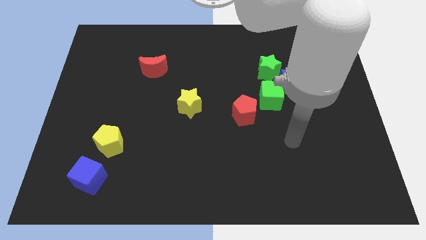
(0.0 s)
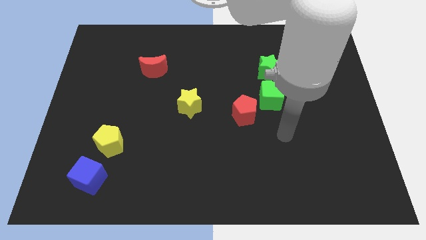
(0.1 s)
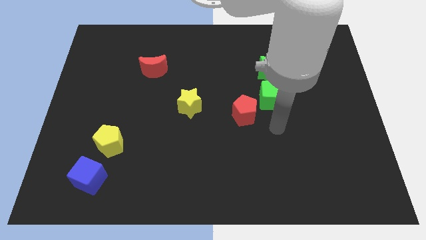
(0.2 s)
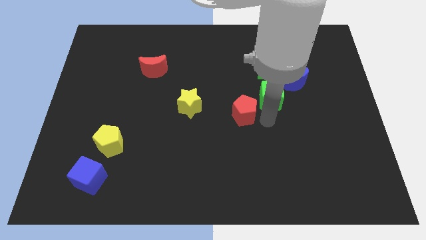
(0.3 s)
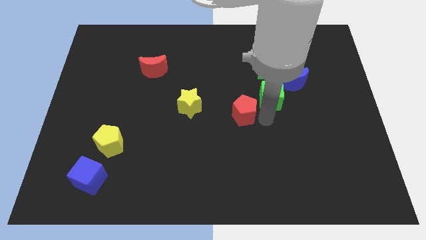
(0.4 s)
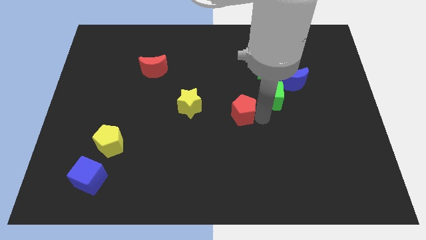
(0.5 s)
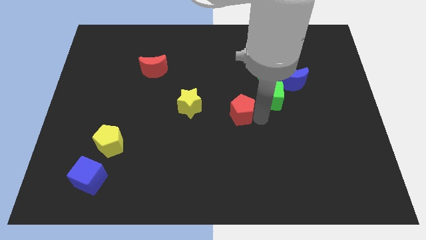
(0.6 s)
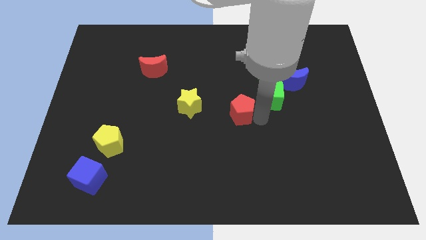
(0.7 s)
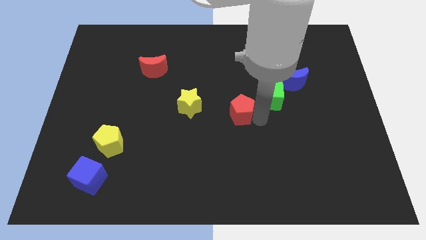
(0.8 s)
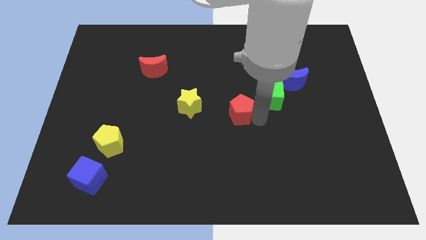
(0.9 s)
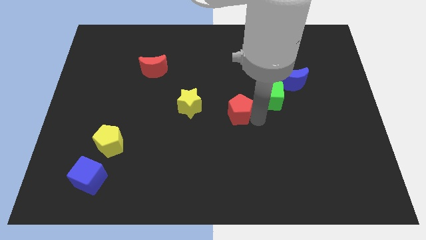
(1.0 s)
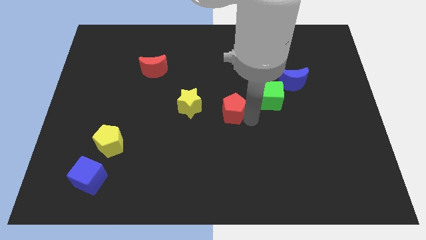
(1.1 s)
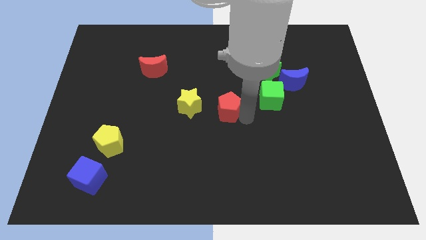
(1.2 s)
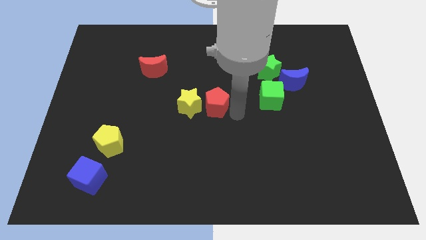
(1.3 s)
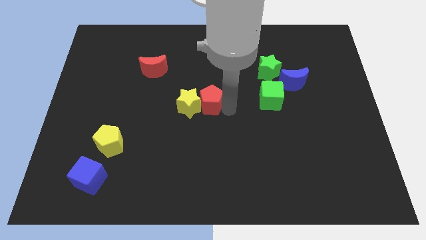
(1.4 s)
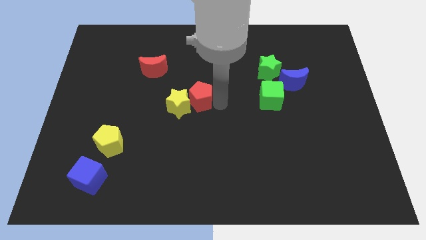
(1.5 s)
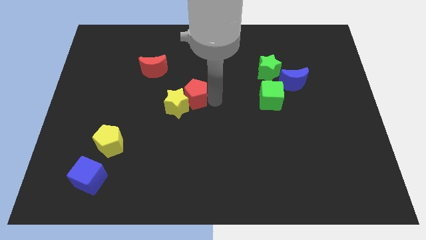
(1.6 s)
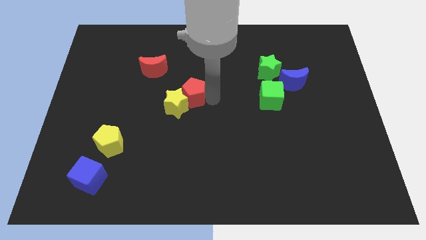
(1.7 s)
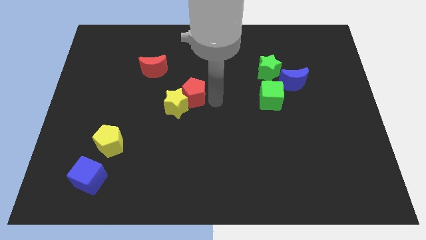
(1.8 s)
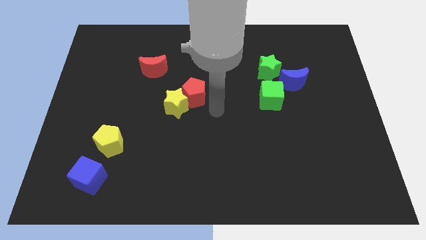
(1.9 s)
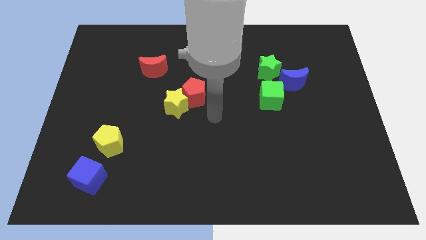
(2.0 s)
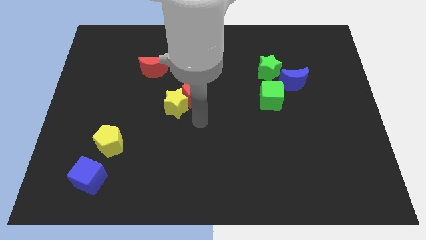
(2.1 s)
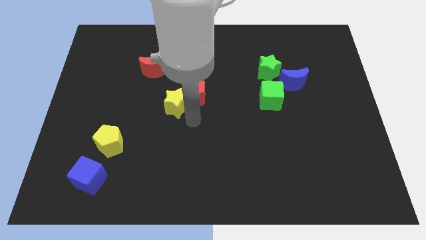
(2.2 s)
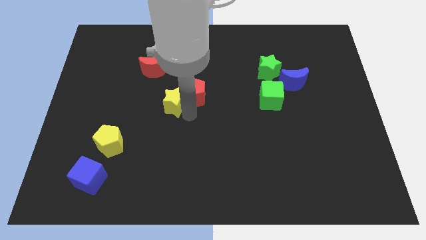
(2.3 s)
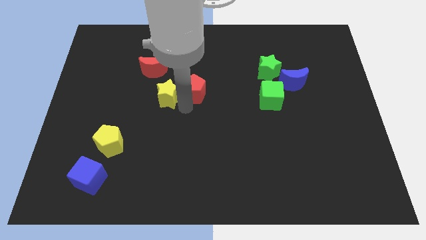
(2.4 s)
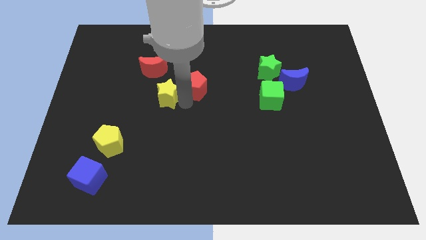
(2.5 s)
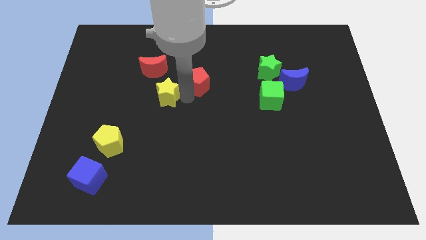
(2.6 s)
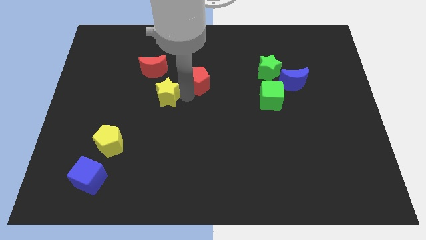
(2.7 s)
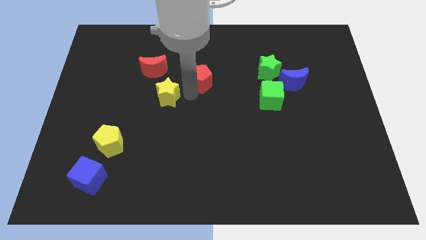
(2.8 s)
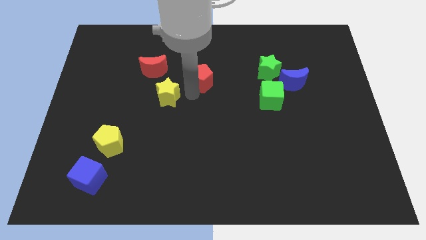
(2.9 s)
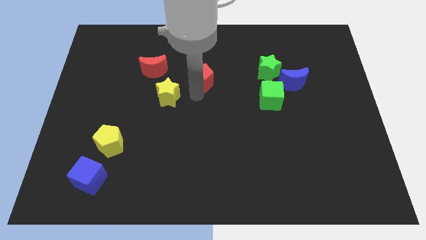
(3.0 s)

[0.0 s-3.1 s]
separate the green cube and red pentagon

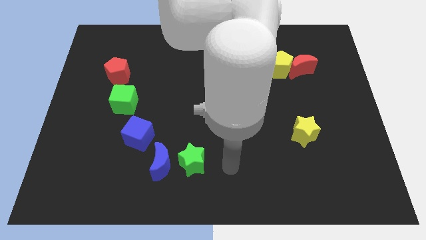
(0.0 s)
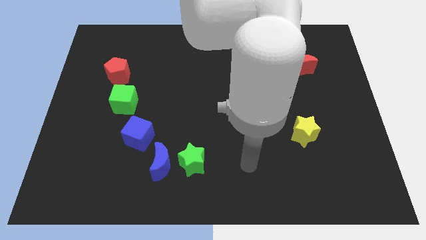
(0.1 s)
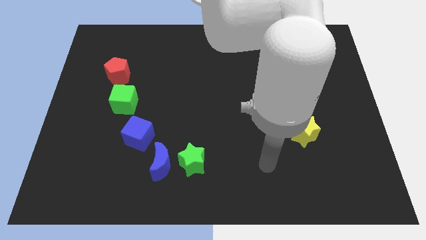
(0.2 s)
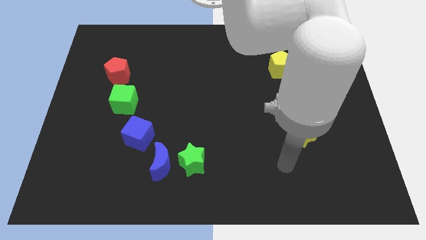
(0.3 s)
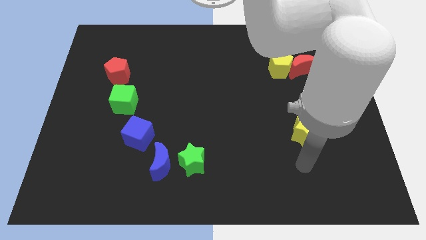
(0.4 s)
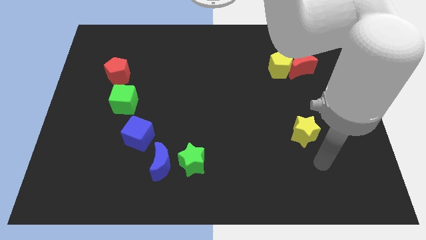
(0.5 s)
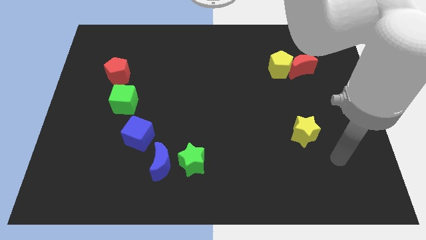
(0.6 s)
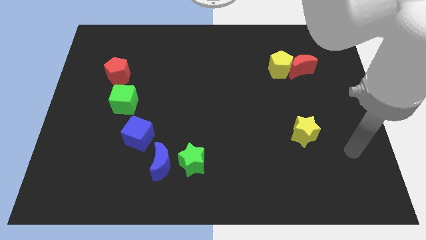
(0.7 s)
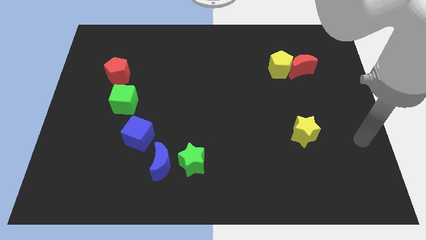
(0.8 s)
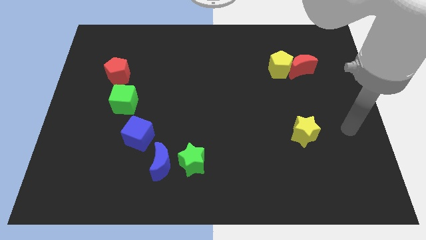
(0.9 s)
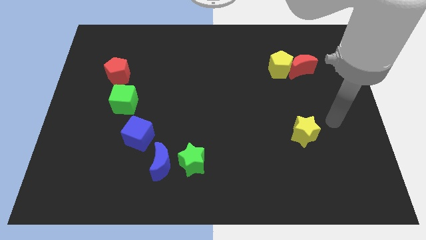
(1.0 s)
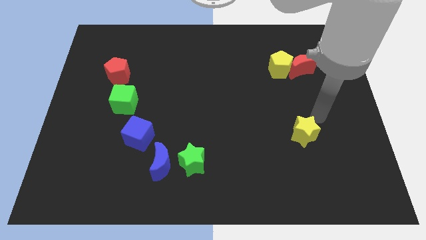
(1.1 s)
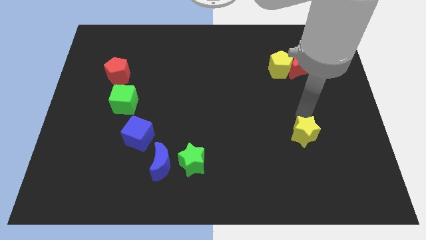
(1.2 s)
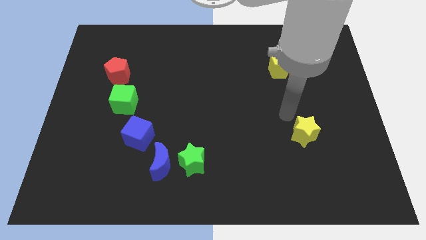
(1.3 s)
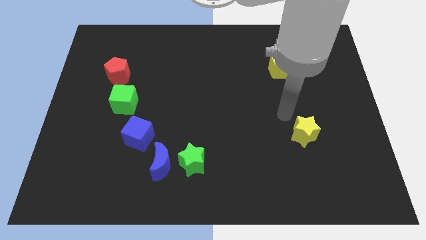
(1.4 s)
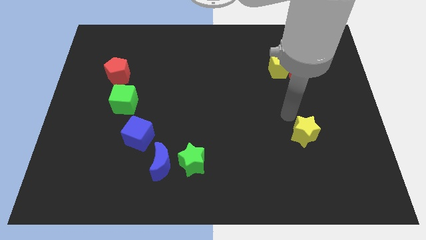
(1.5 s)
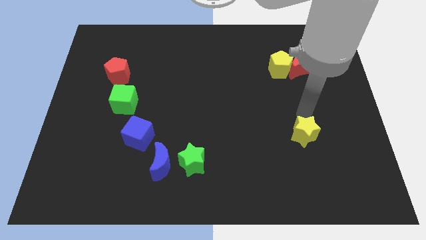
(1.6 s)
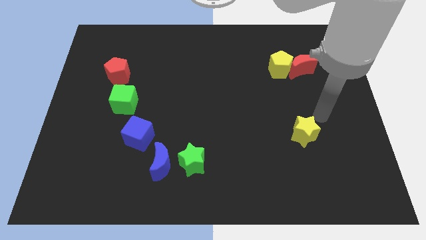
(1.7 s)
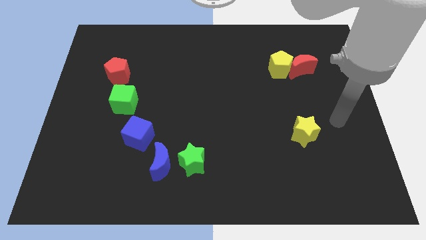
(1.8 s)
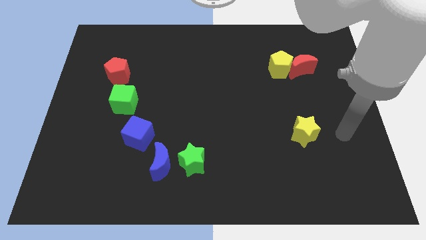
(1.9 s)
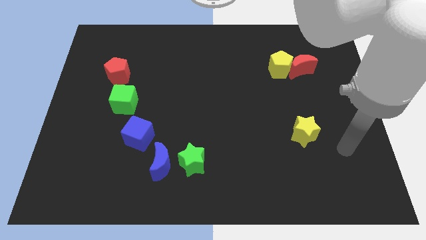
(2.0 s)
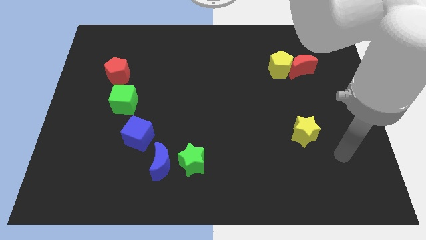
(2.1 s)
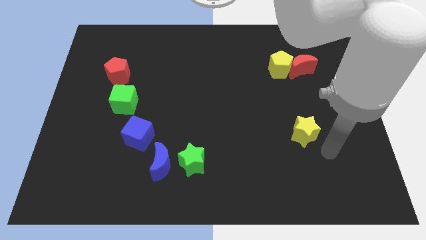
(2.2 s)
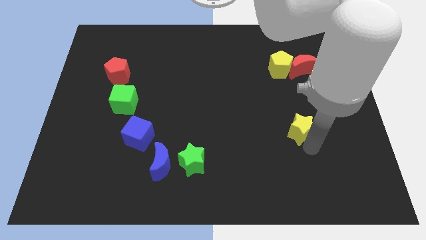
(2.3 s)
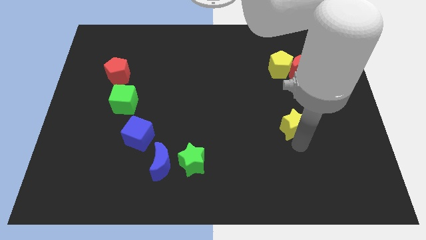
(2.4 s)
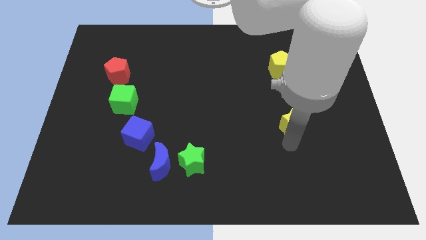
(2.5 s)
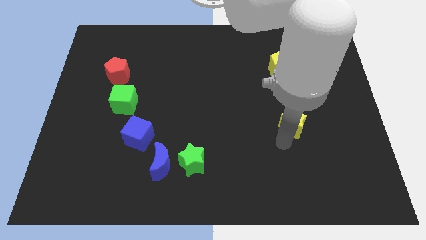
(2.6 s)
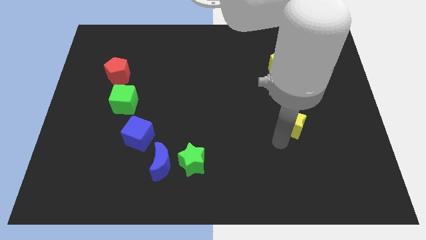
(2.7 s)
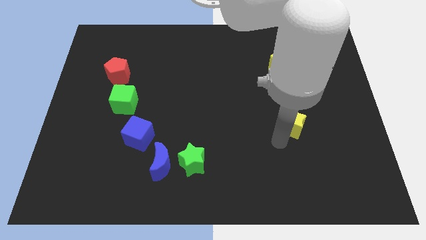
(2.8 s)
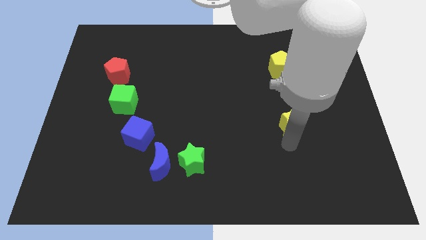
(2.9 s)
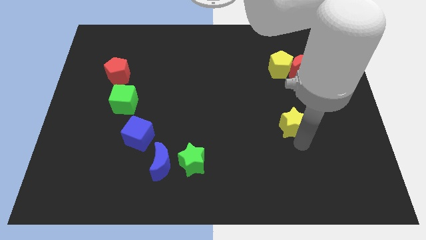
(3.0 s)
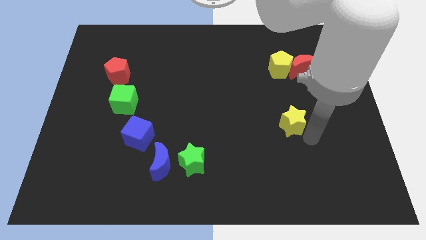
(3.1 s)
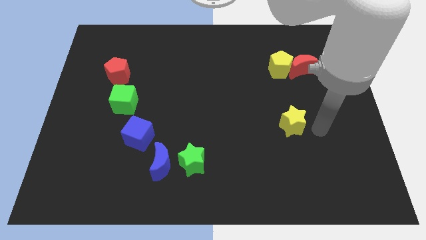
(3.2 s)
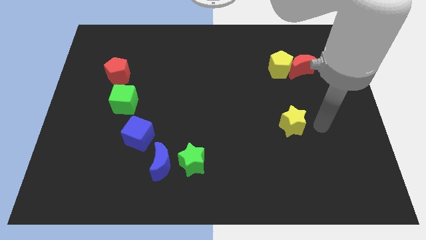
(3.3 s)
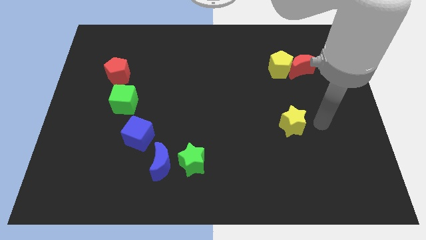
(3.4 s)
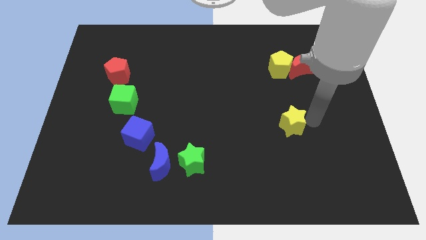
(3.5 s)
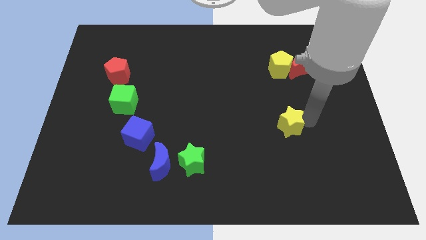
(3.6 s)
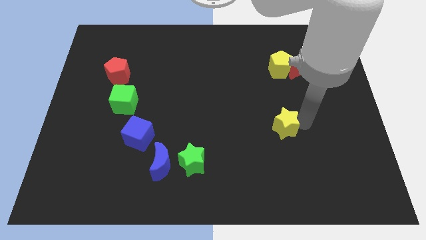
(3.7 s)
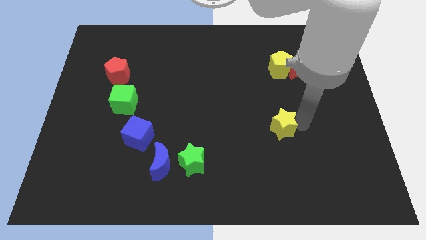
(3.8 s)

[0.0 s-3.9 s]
push the yellow star to the bottom of the yellow pentagon

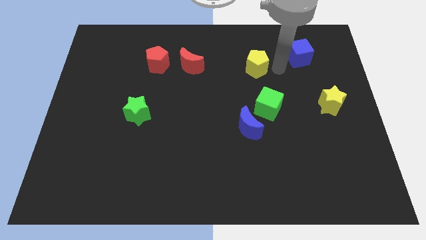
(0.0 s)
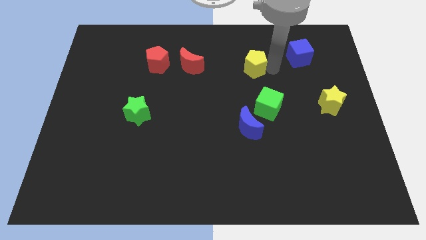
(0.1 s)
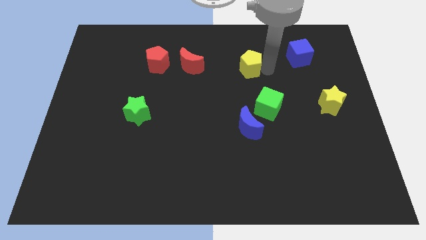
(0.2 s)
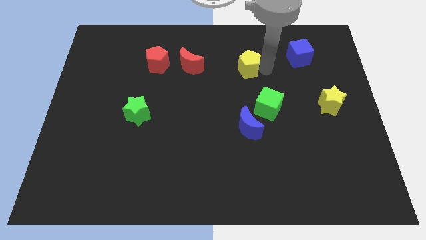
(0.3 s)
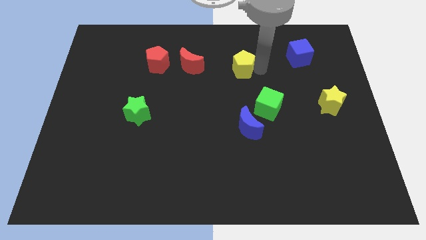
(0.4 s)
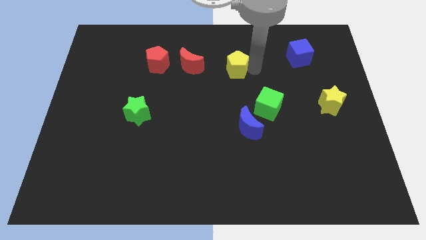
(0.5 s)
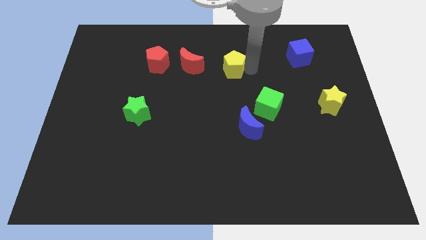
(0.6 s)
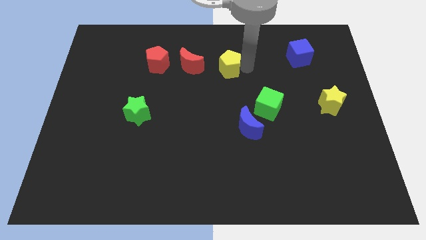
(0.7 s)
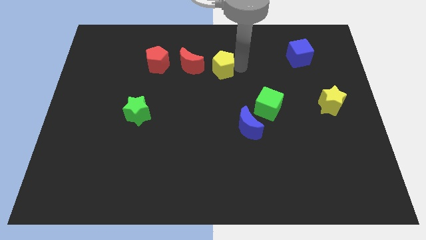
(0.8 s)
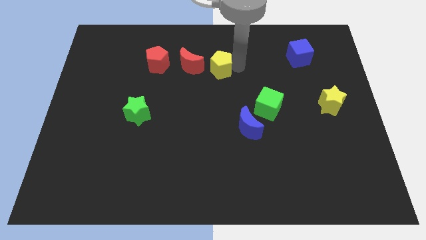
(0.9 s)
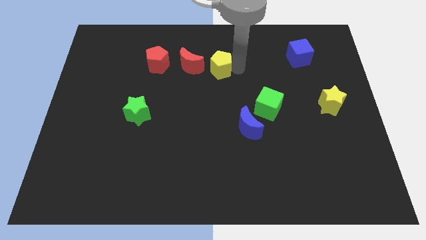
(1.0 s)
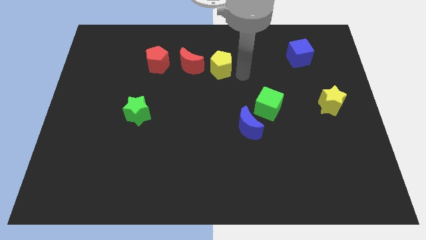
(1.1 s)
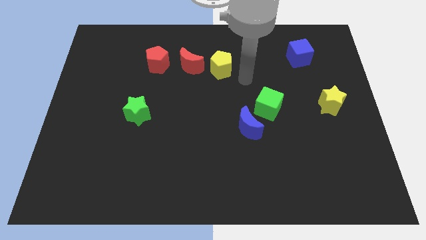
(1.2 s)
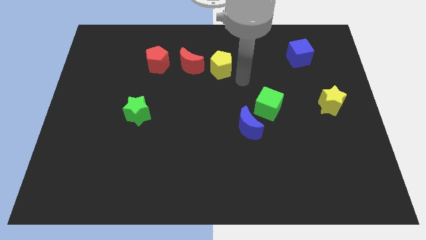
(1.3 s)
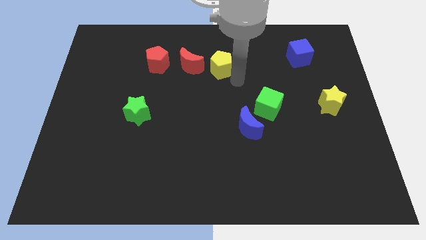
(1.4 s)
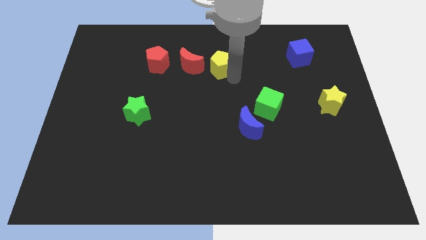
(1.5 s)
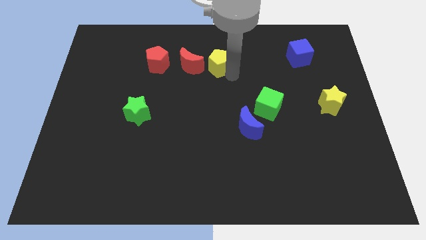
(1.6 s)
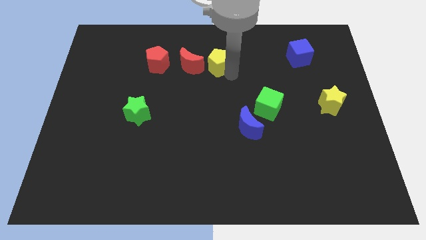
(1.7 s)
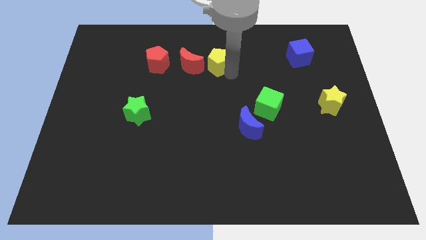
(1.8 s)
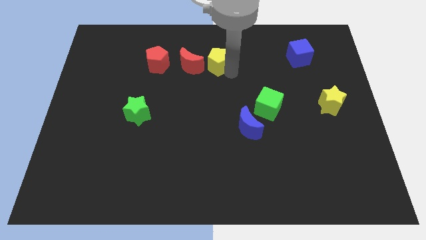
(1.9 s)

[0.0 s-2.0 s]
slide the yellow pentagon diagonally top left to the green cube
